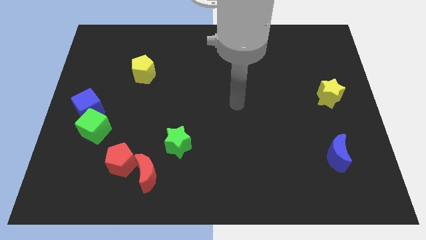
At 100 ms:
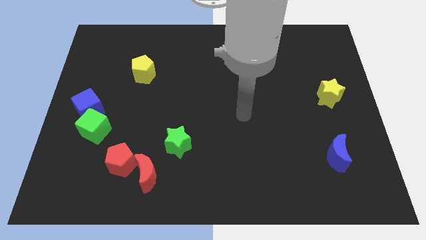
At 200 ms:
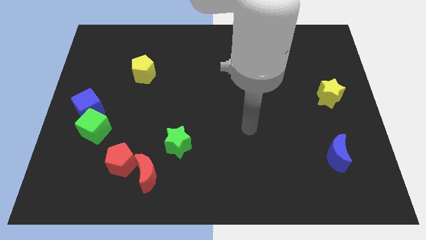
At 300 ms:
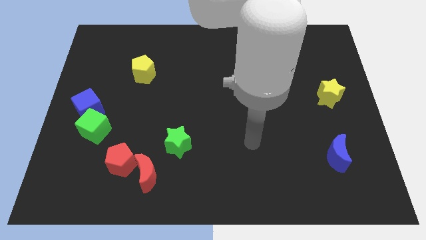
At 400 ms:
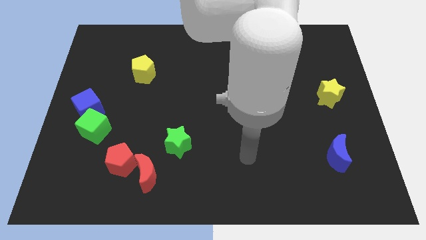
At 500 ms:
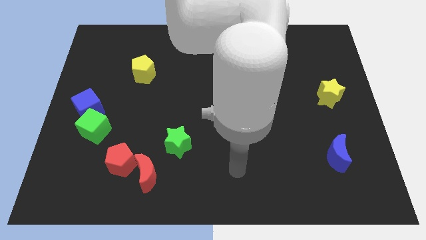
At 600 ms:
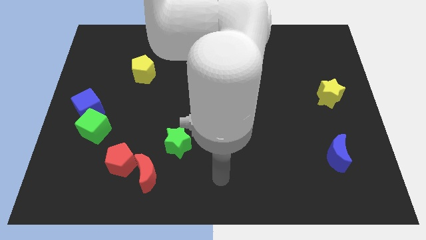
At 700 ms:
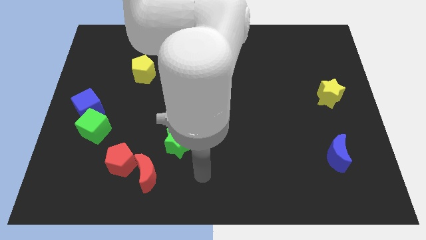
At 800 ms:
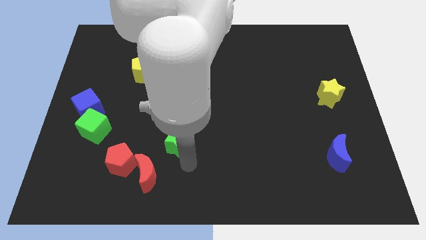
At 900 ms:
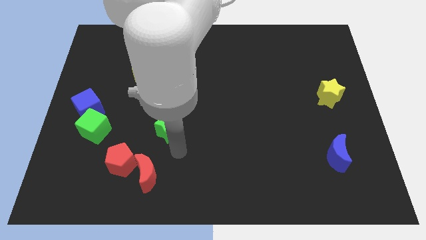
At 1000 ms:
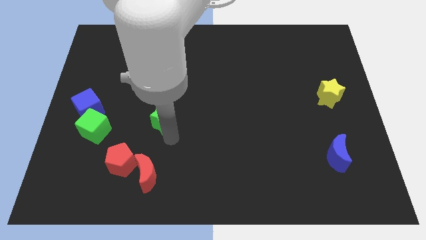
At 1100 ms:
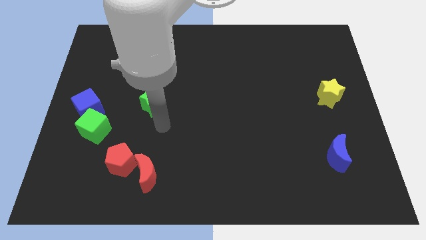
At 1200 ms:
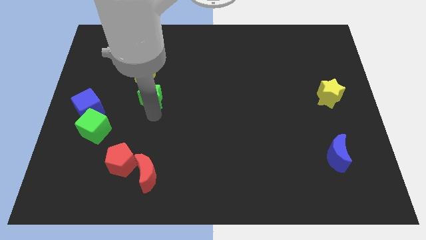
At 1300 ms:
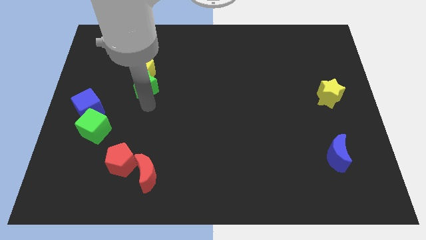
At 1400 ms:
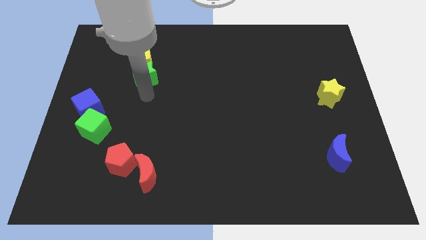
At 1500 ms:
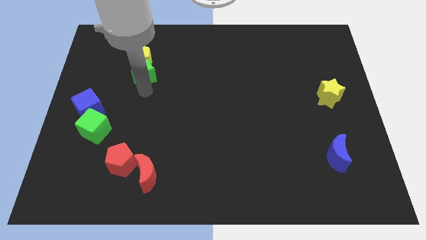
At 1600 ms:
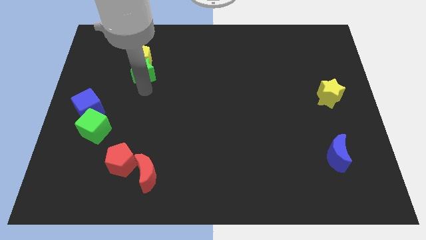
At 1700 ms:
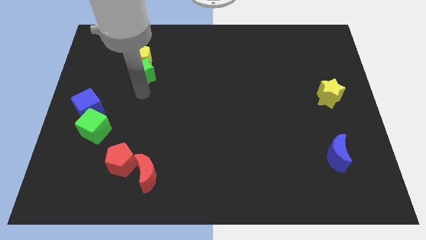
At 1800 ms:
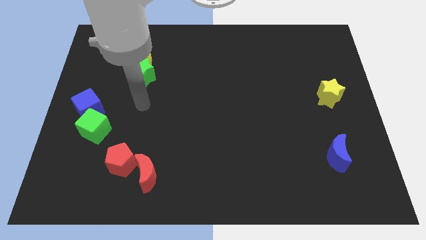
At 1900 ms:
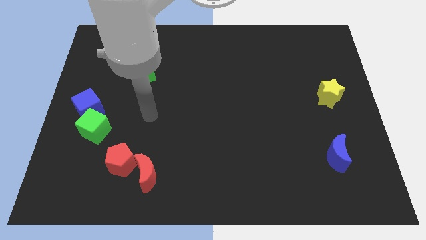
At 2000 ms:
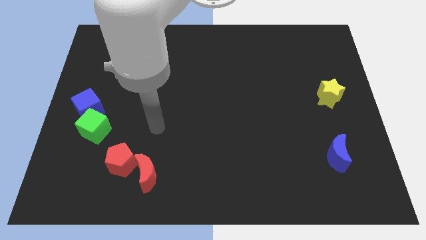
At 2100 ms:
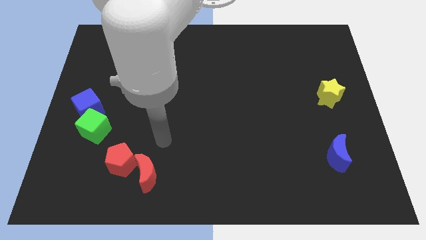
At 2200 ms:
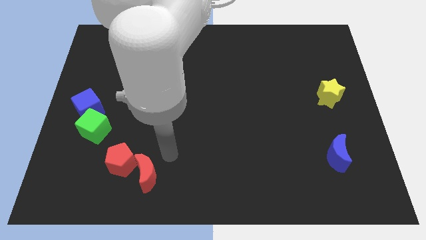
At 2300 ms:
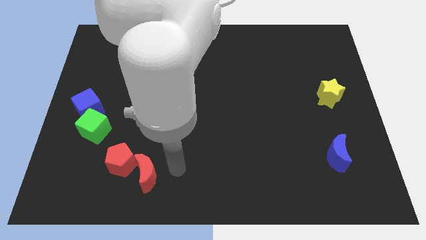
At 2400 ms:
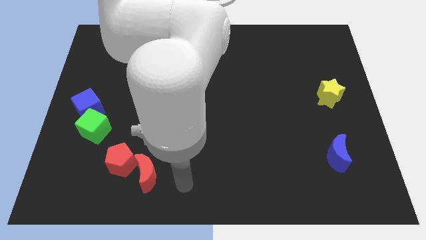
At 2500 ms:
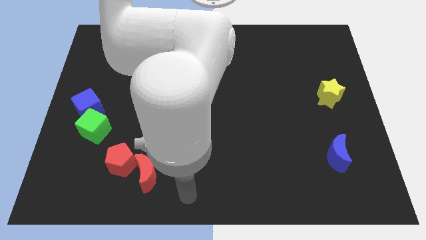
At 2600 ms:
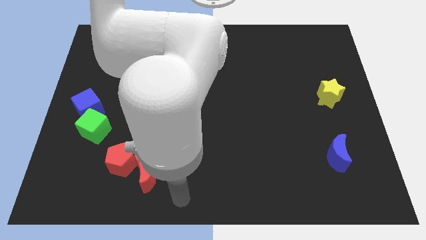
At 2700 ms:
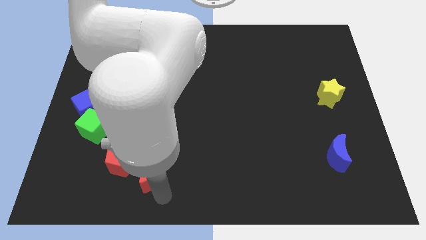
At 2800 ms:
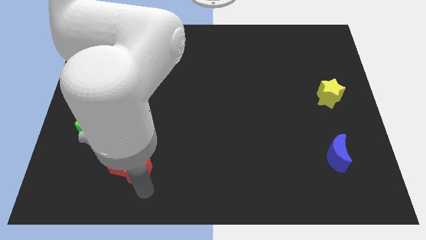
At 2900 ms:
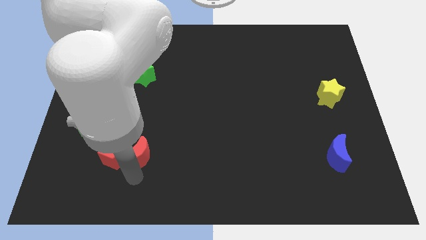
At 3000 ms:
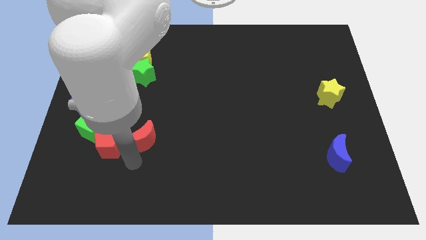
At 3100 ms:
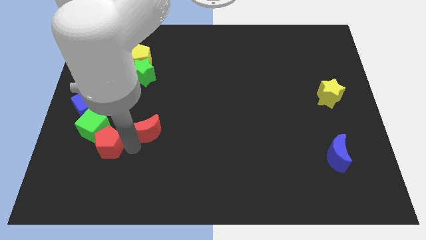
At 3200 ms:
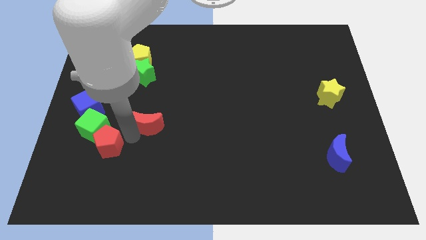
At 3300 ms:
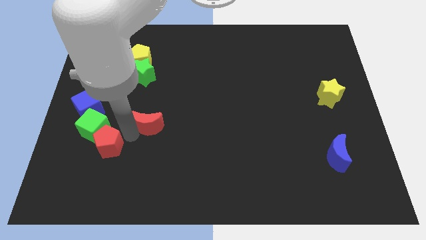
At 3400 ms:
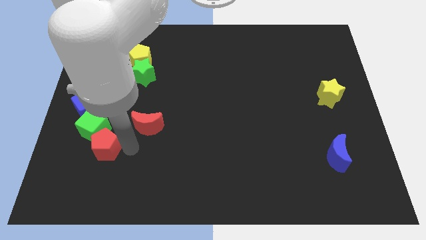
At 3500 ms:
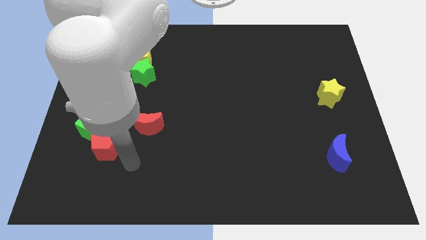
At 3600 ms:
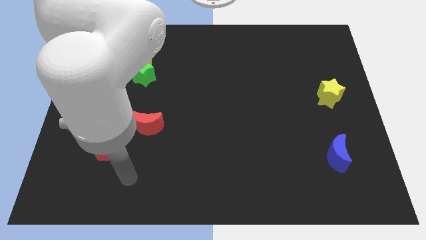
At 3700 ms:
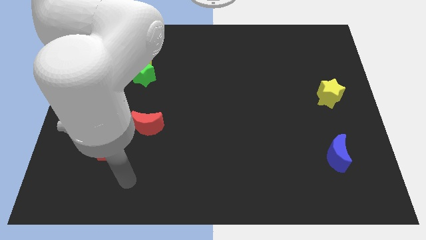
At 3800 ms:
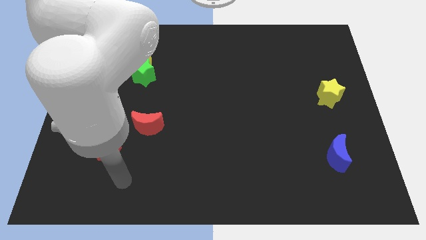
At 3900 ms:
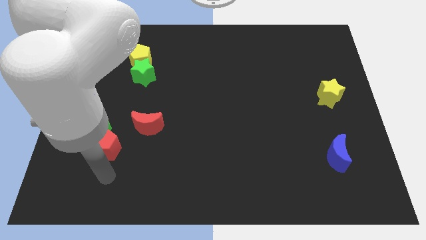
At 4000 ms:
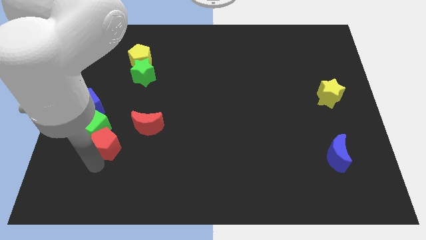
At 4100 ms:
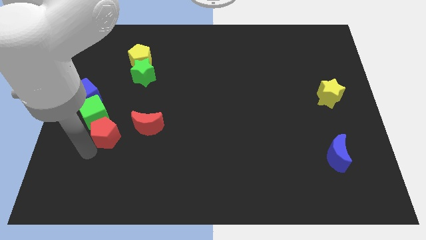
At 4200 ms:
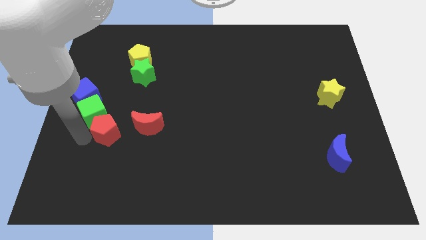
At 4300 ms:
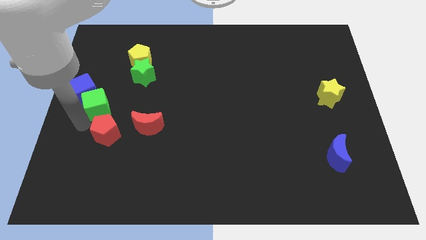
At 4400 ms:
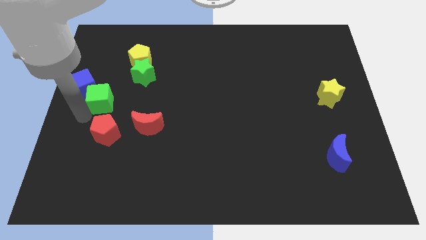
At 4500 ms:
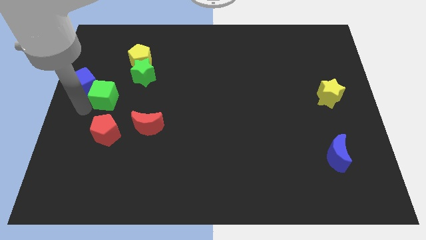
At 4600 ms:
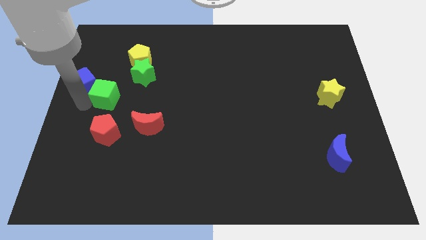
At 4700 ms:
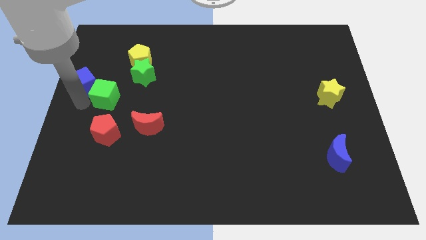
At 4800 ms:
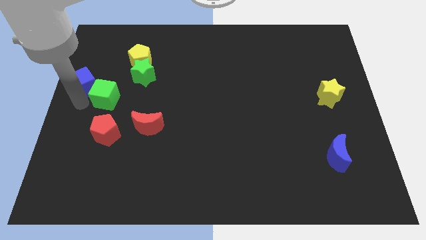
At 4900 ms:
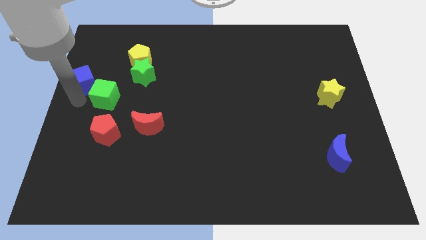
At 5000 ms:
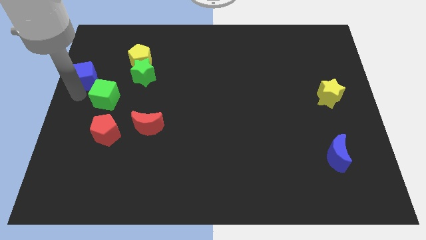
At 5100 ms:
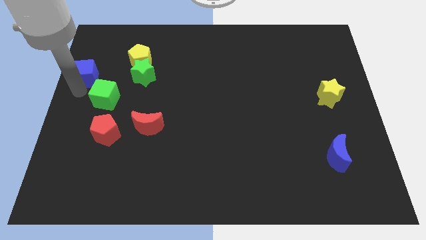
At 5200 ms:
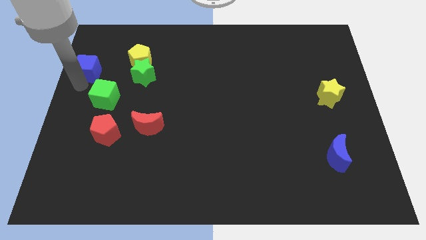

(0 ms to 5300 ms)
move all the blocks upwards except the yellow star and blue crescent

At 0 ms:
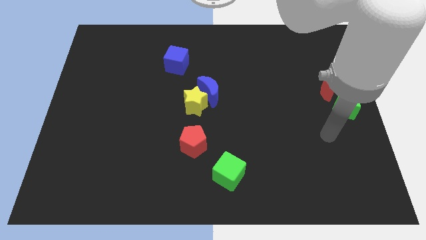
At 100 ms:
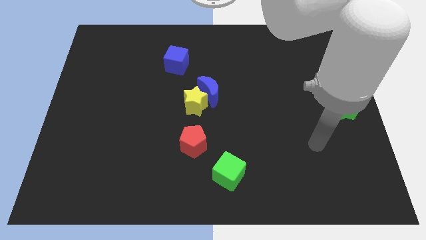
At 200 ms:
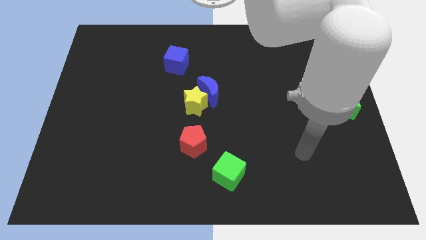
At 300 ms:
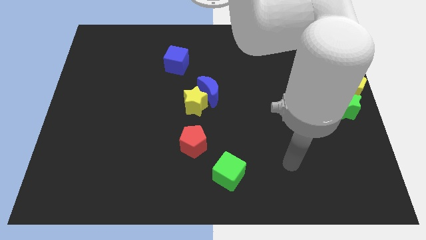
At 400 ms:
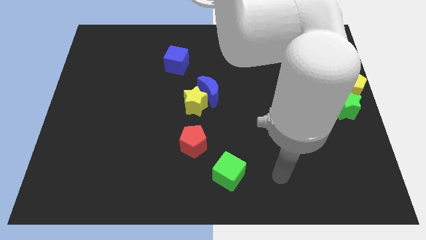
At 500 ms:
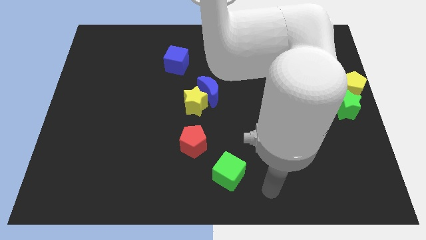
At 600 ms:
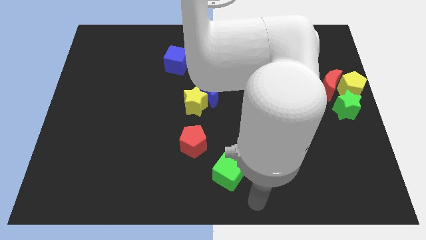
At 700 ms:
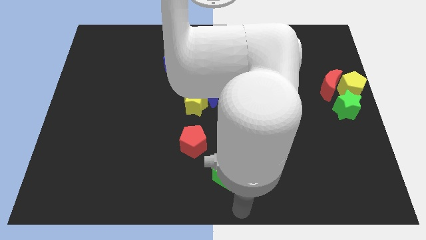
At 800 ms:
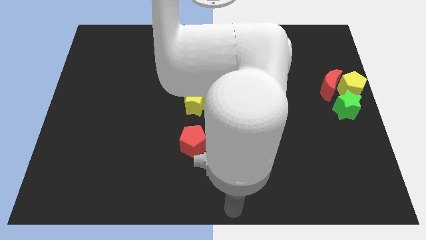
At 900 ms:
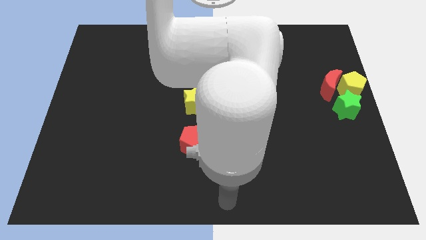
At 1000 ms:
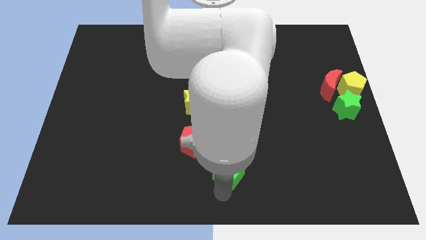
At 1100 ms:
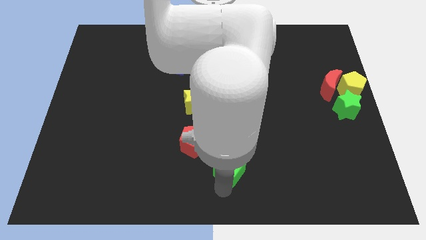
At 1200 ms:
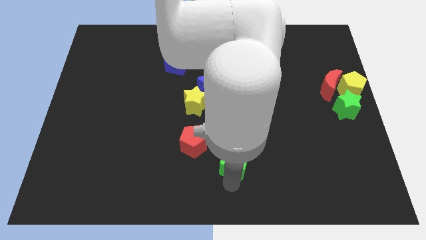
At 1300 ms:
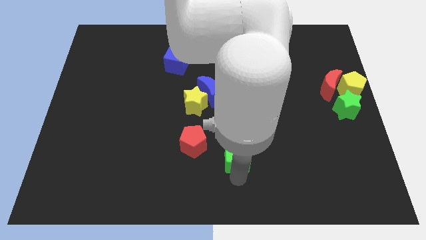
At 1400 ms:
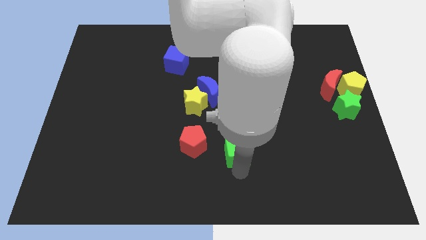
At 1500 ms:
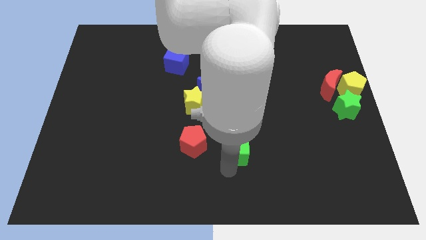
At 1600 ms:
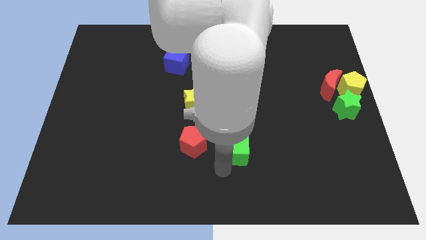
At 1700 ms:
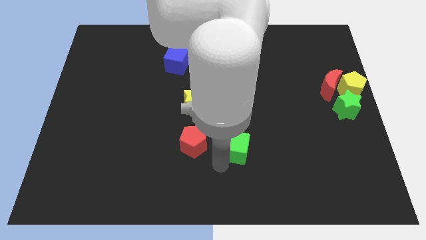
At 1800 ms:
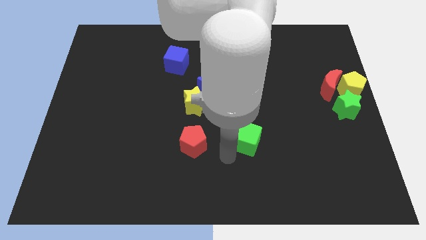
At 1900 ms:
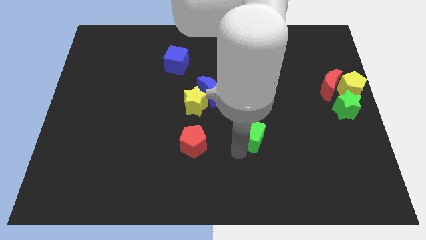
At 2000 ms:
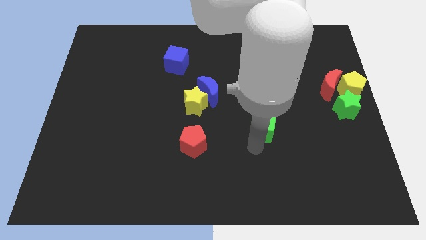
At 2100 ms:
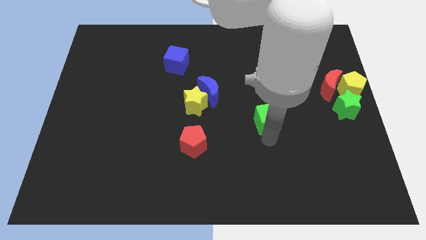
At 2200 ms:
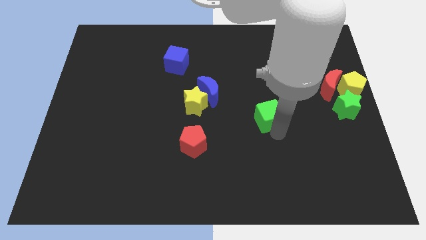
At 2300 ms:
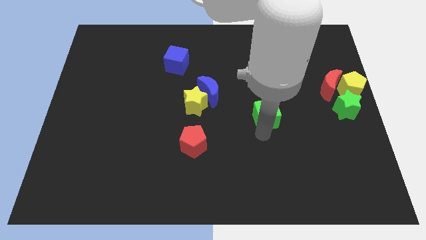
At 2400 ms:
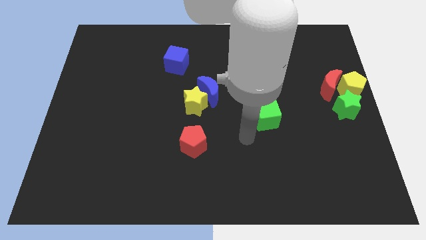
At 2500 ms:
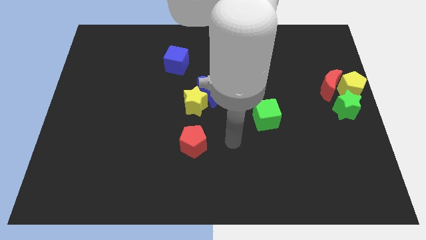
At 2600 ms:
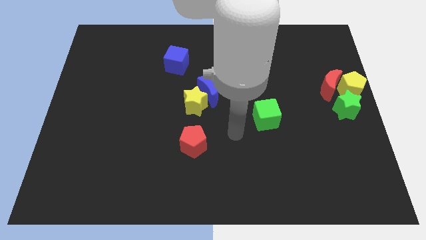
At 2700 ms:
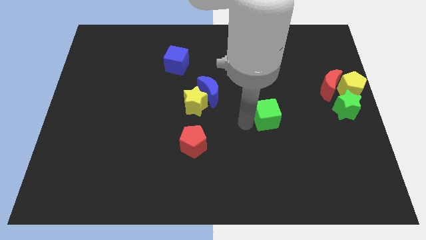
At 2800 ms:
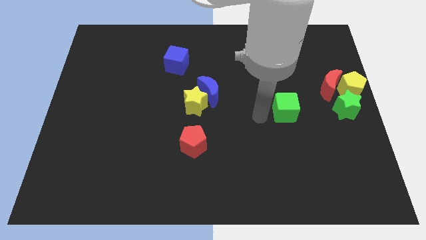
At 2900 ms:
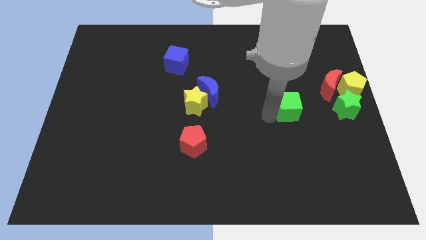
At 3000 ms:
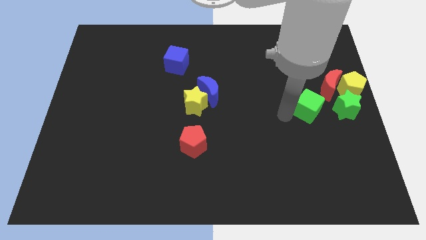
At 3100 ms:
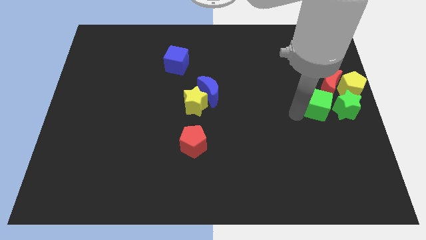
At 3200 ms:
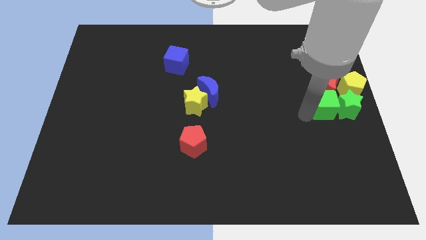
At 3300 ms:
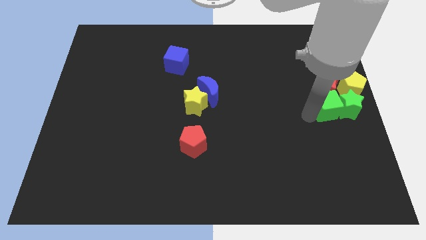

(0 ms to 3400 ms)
push the green cube left to green star

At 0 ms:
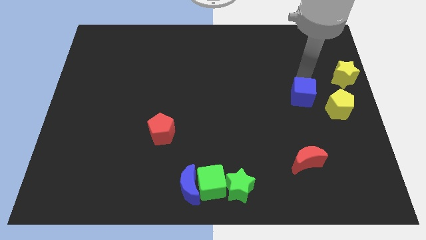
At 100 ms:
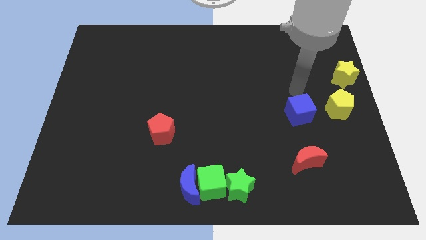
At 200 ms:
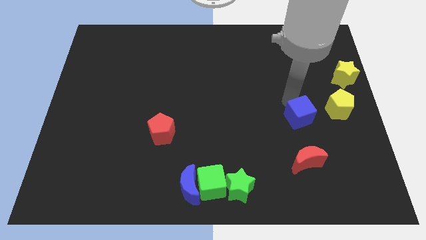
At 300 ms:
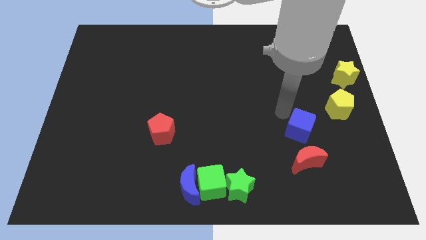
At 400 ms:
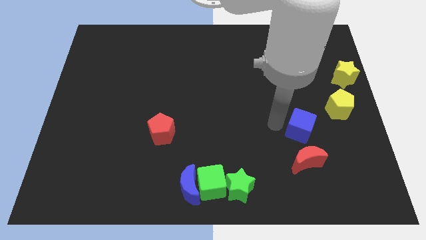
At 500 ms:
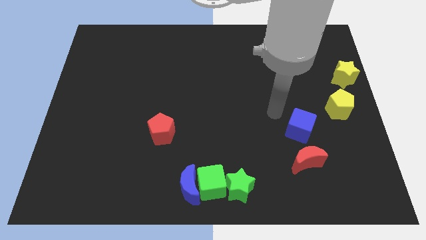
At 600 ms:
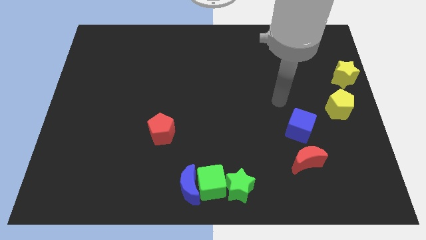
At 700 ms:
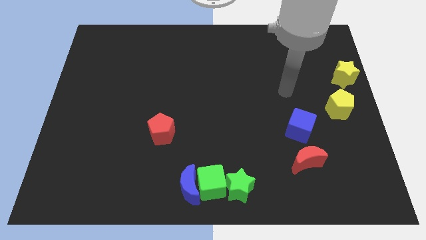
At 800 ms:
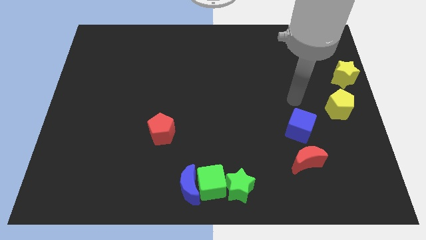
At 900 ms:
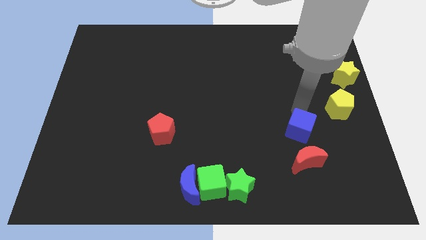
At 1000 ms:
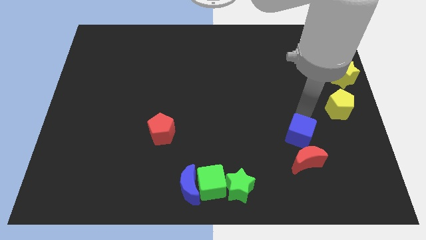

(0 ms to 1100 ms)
push the blue cube slightly downwards
